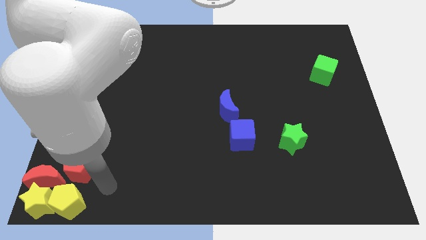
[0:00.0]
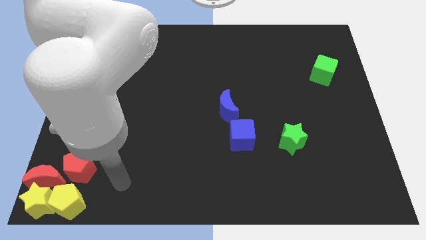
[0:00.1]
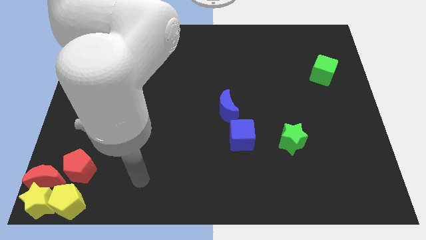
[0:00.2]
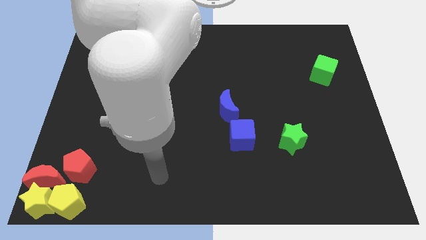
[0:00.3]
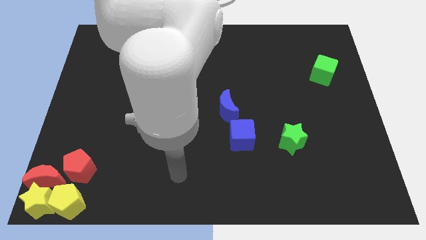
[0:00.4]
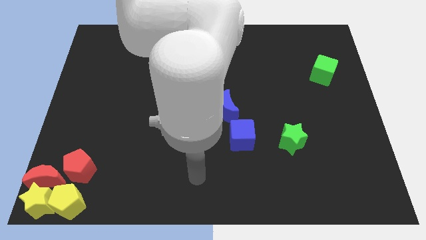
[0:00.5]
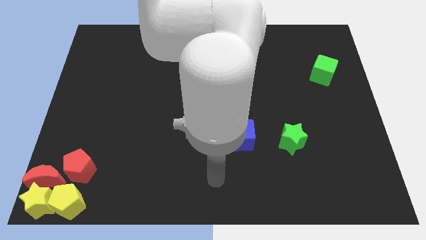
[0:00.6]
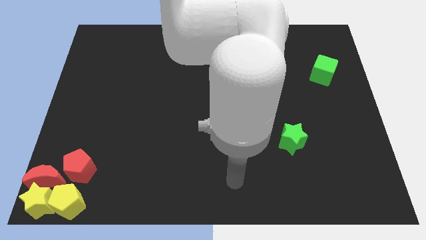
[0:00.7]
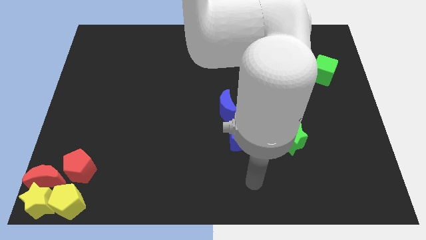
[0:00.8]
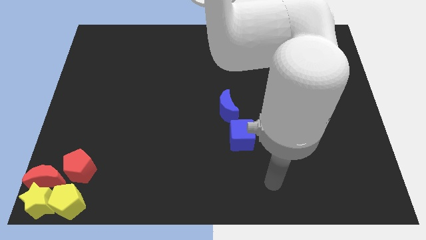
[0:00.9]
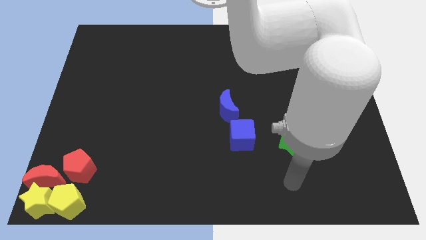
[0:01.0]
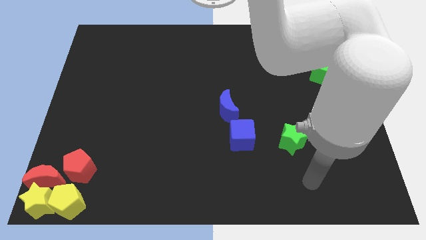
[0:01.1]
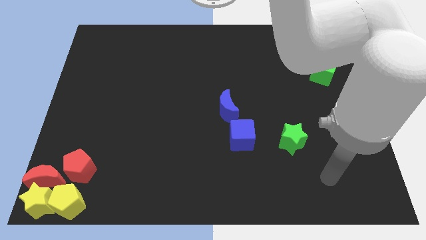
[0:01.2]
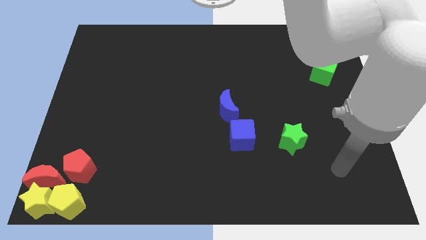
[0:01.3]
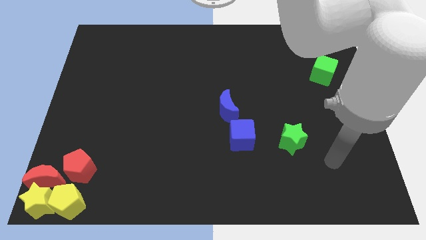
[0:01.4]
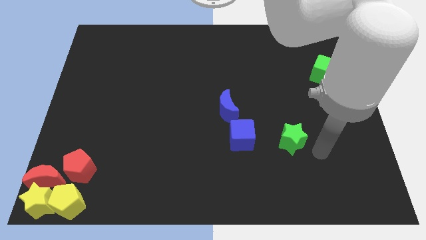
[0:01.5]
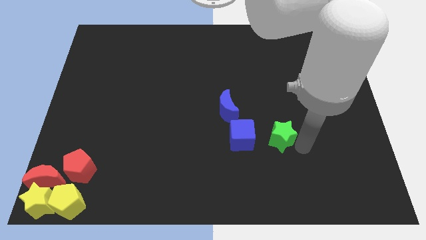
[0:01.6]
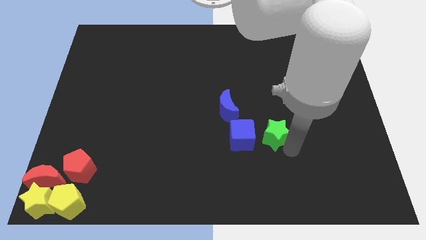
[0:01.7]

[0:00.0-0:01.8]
put the green star right to the blue cube

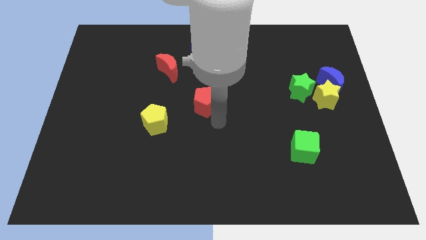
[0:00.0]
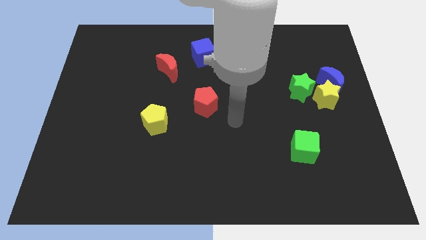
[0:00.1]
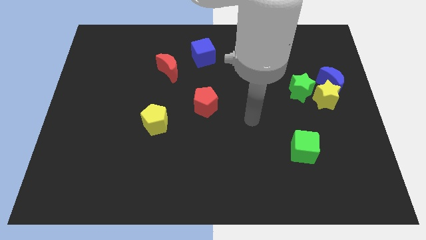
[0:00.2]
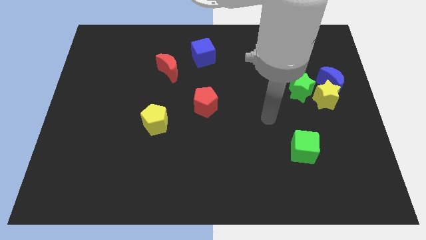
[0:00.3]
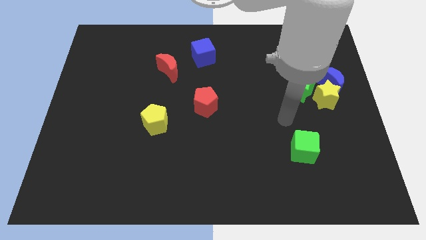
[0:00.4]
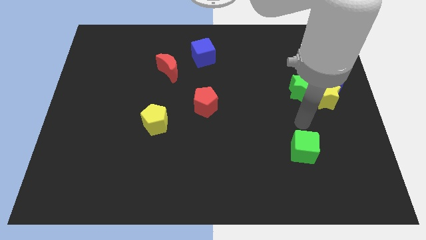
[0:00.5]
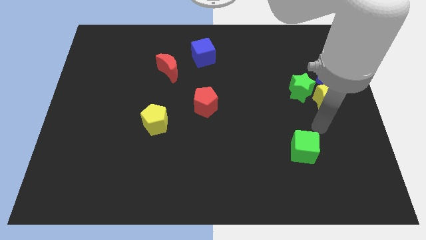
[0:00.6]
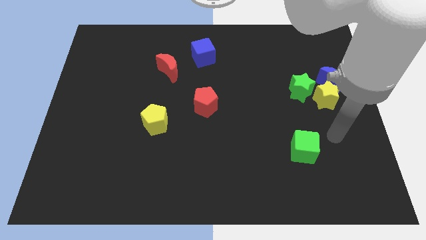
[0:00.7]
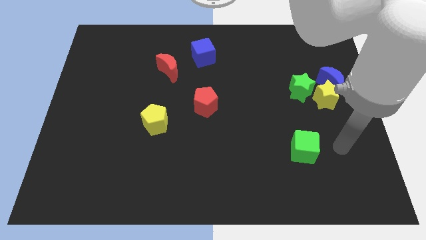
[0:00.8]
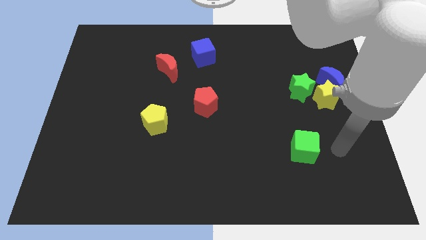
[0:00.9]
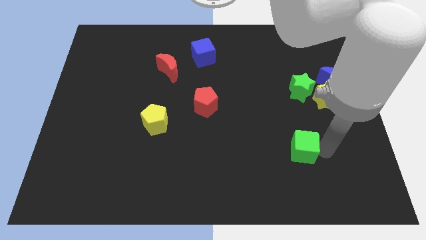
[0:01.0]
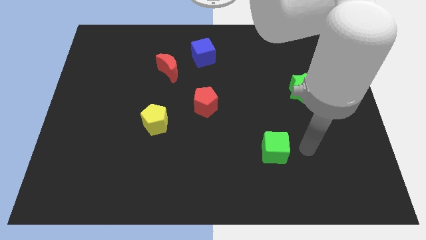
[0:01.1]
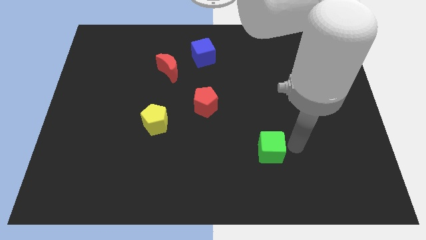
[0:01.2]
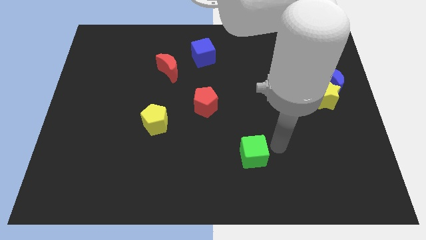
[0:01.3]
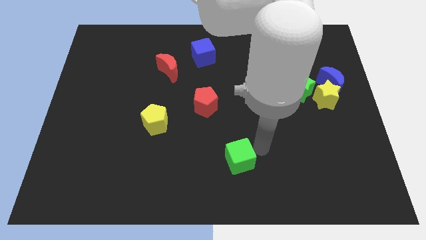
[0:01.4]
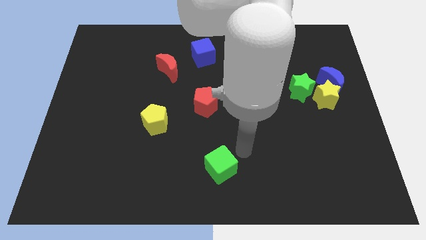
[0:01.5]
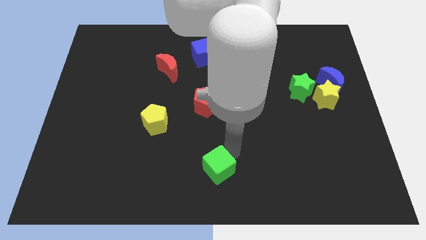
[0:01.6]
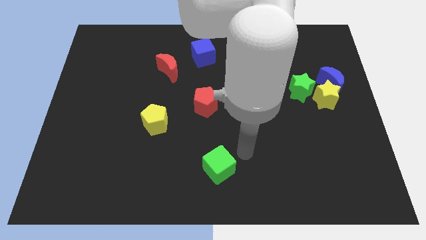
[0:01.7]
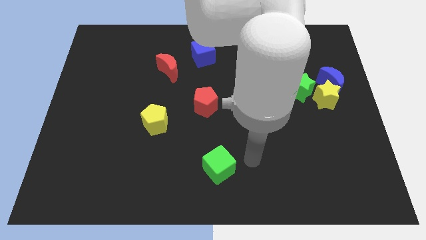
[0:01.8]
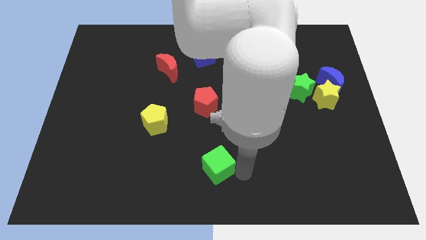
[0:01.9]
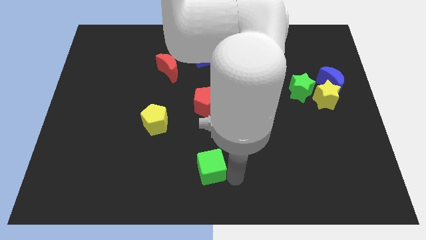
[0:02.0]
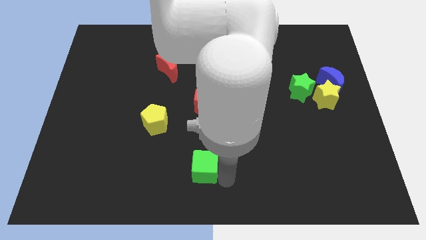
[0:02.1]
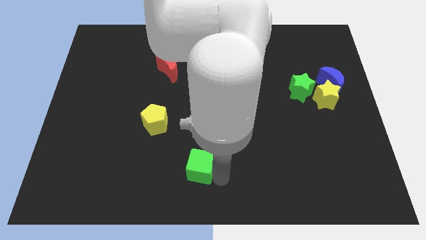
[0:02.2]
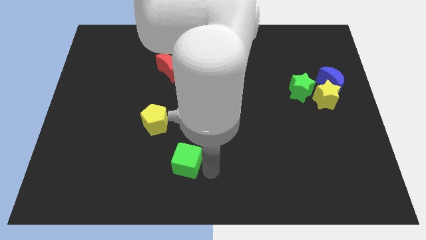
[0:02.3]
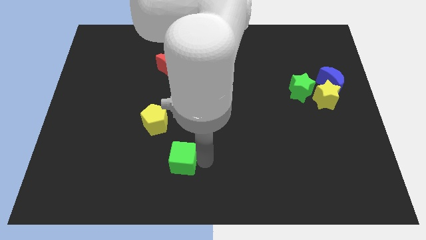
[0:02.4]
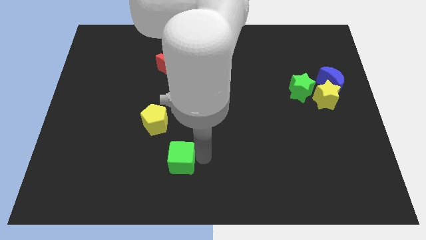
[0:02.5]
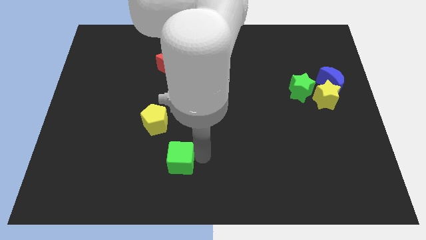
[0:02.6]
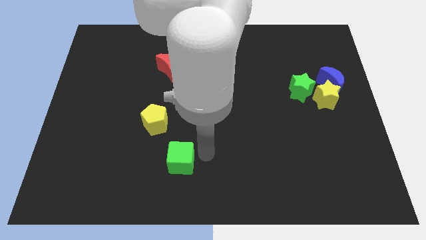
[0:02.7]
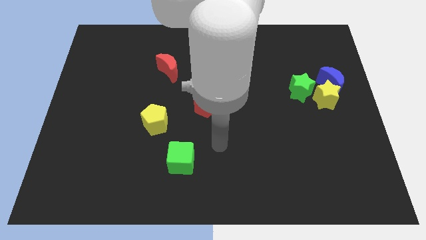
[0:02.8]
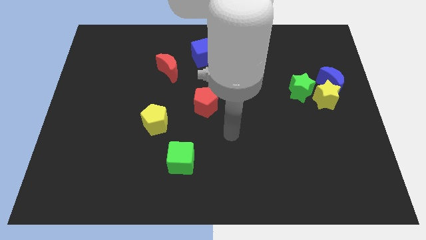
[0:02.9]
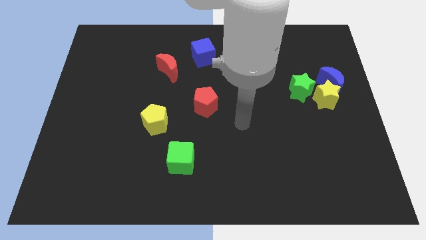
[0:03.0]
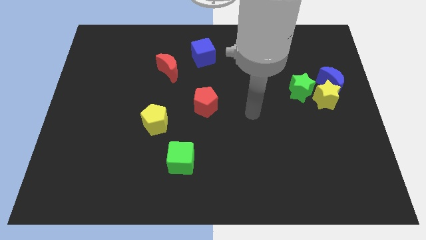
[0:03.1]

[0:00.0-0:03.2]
move the green cube to the left of the board

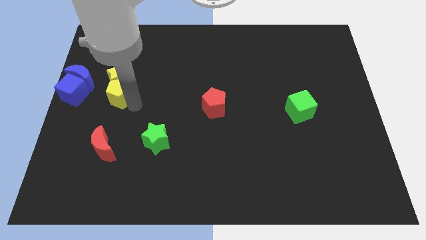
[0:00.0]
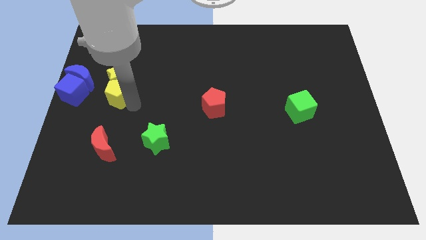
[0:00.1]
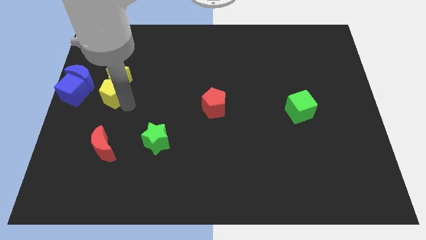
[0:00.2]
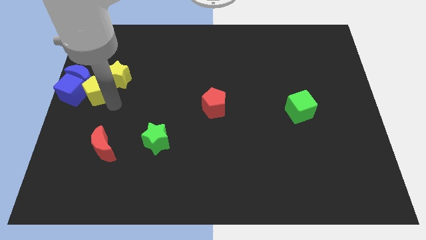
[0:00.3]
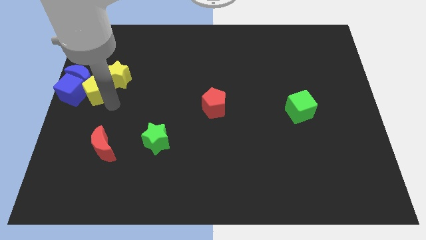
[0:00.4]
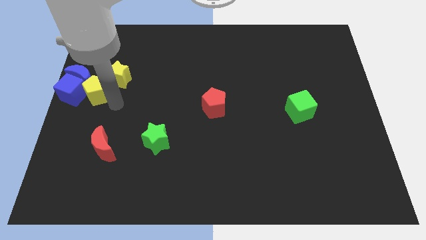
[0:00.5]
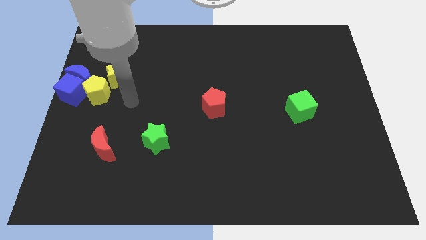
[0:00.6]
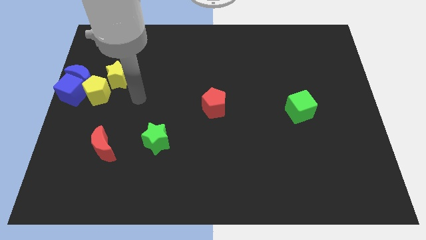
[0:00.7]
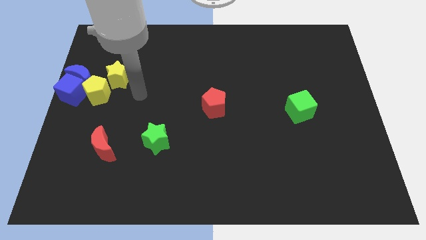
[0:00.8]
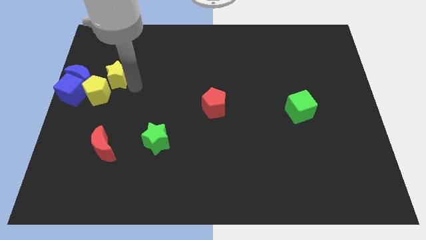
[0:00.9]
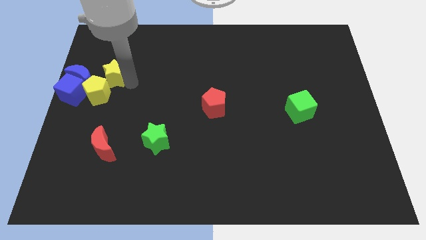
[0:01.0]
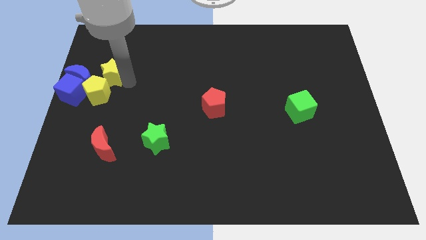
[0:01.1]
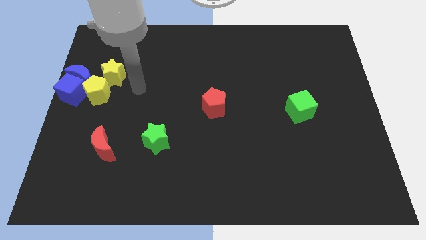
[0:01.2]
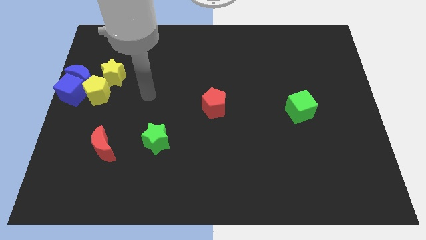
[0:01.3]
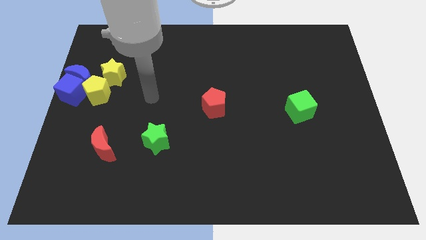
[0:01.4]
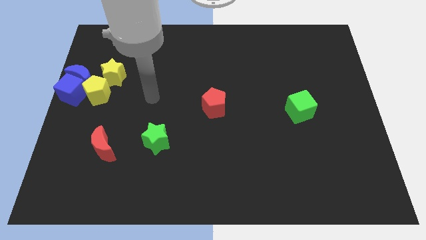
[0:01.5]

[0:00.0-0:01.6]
move yellow blocks to the right of the blue blocks

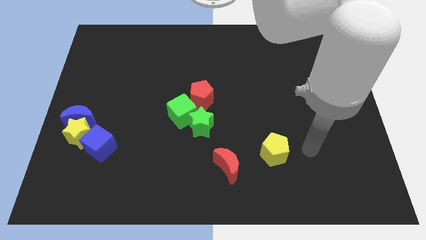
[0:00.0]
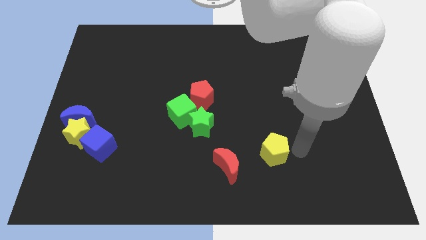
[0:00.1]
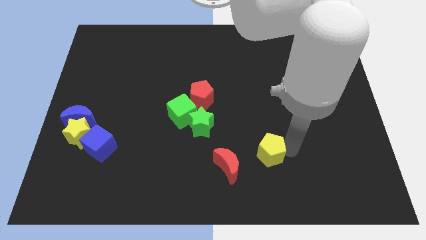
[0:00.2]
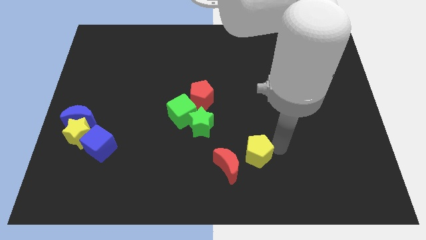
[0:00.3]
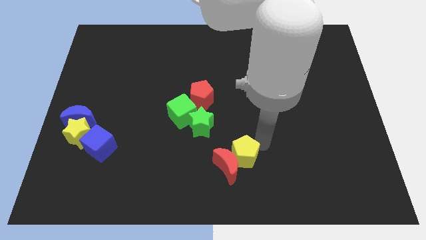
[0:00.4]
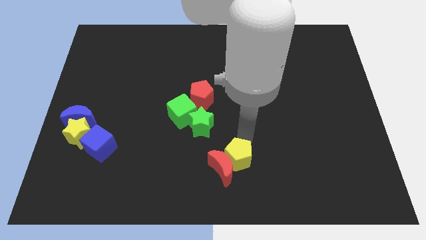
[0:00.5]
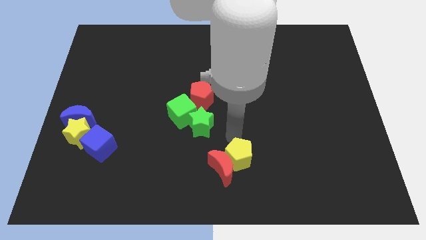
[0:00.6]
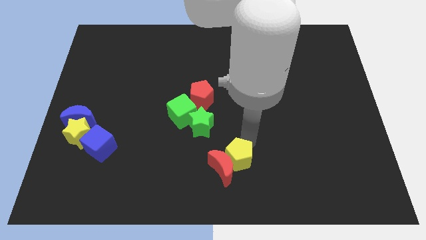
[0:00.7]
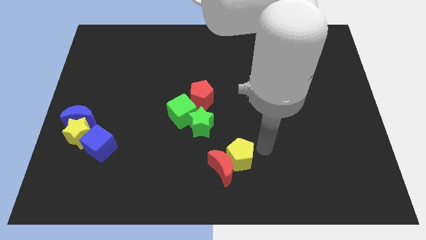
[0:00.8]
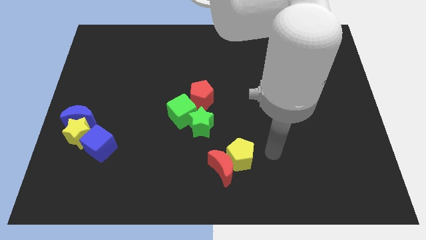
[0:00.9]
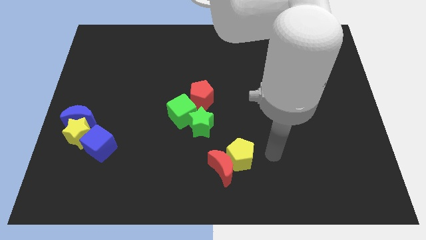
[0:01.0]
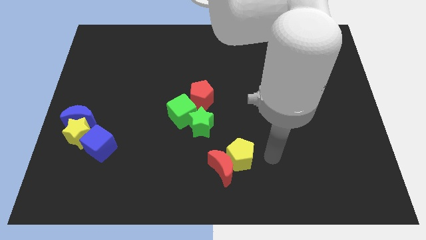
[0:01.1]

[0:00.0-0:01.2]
push the yellow pentagon into the red moon

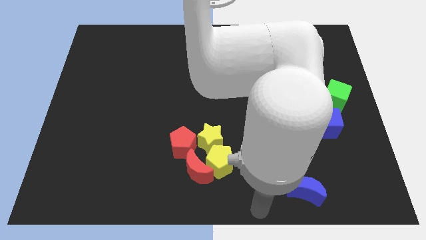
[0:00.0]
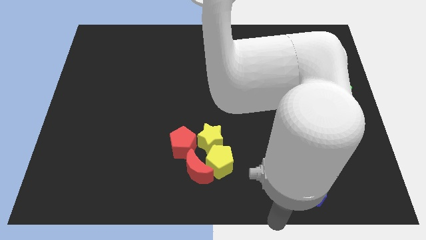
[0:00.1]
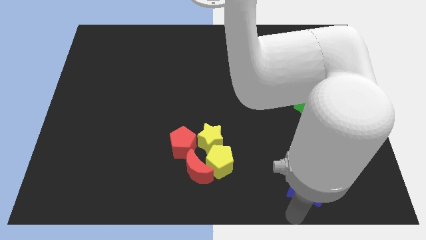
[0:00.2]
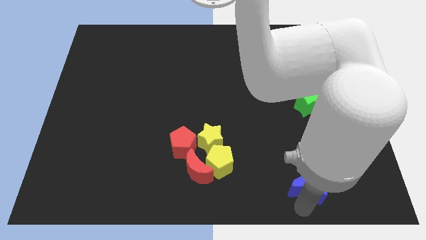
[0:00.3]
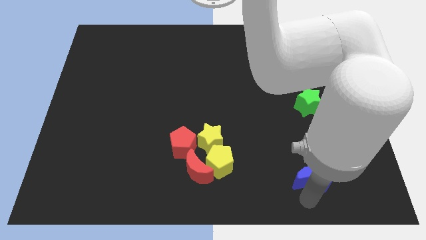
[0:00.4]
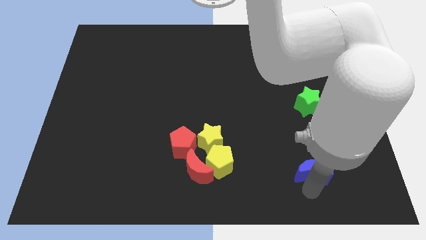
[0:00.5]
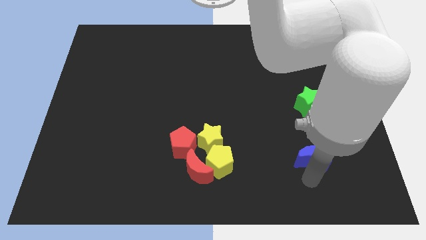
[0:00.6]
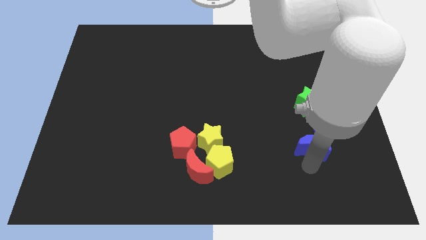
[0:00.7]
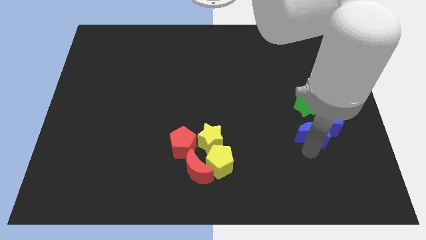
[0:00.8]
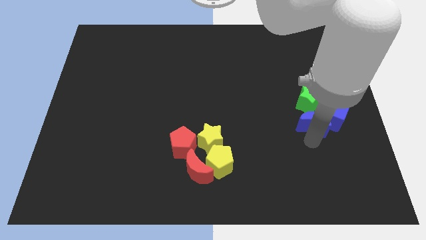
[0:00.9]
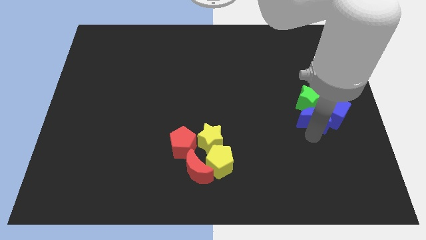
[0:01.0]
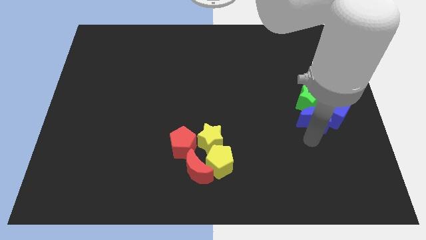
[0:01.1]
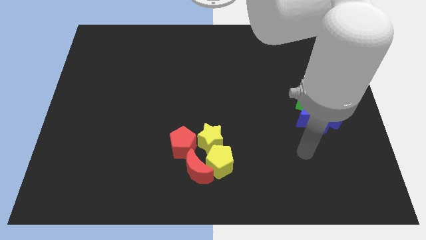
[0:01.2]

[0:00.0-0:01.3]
move the blue crescent to the bottom of the blue cube
